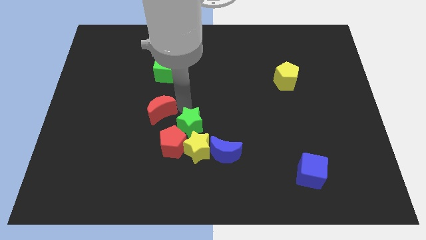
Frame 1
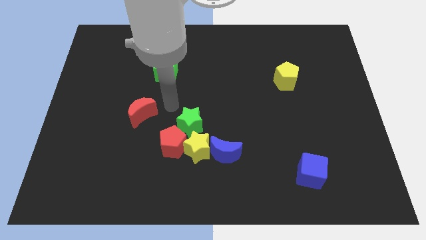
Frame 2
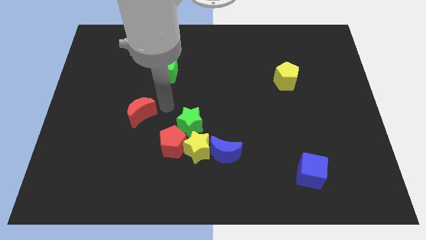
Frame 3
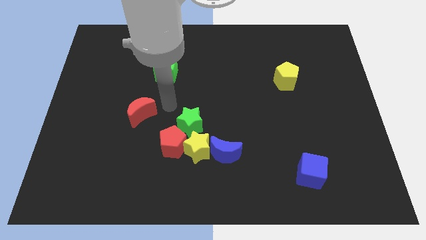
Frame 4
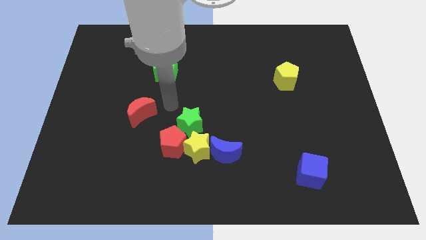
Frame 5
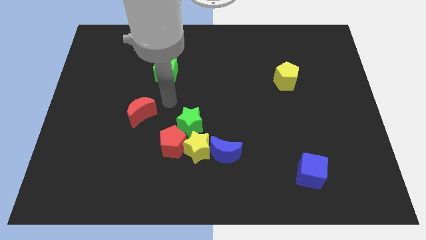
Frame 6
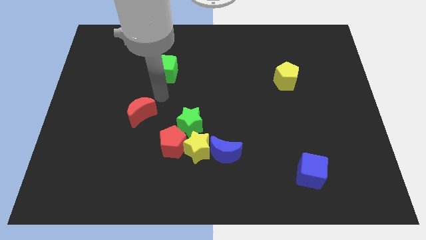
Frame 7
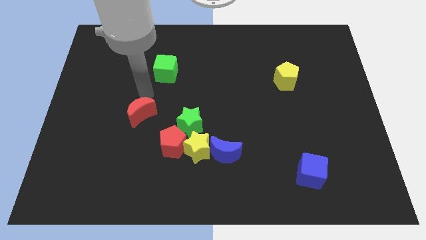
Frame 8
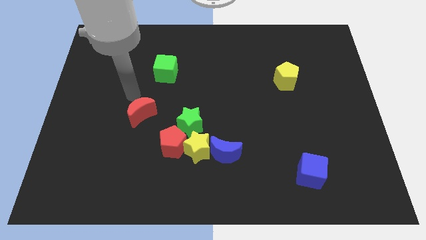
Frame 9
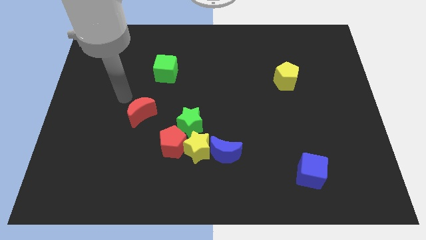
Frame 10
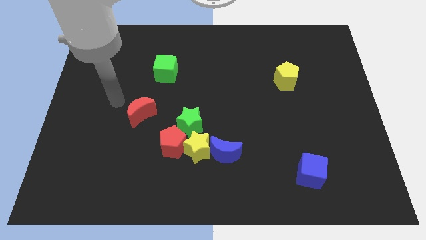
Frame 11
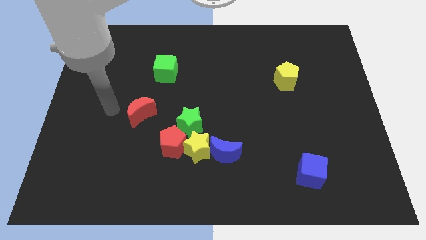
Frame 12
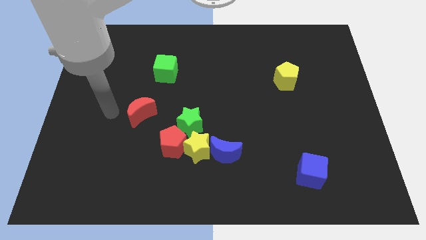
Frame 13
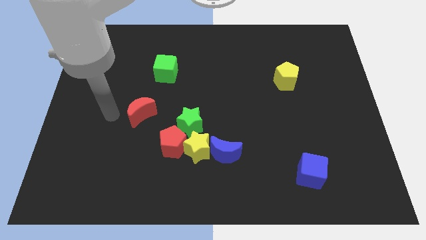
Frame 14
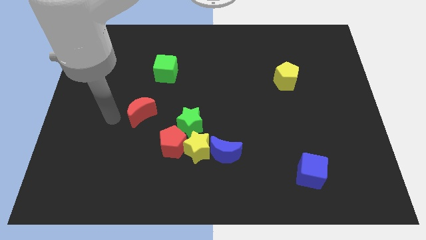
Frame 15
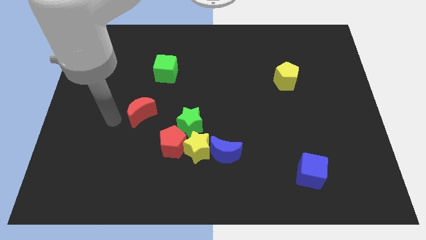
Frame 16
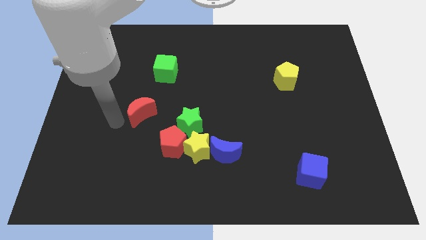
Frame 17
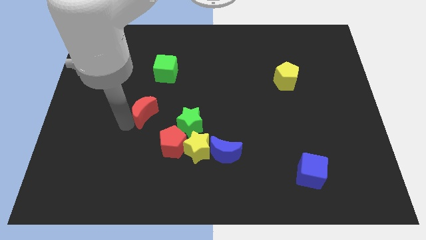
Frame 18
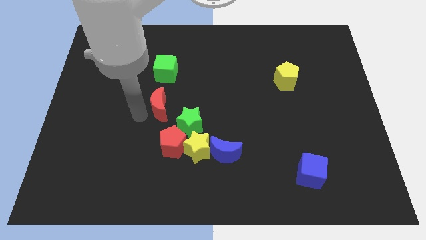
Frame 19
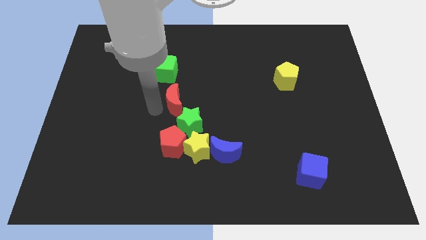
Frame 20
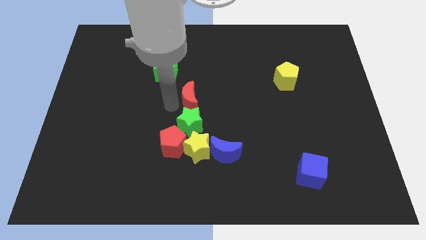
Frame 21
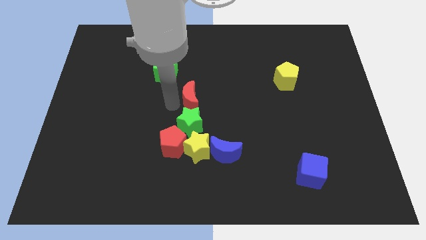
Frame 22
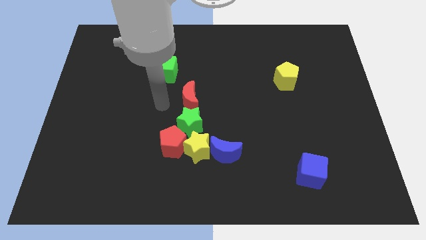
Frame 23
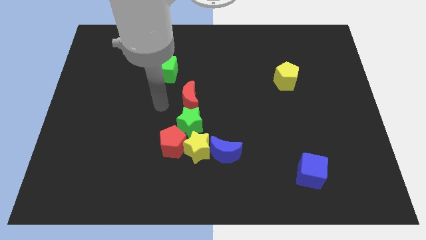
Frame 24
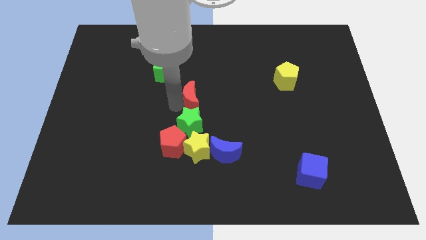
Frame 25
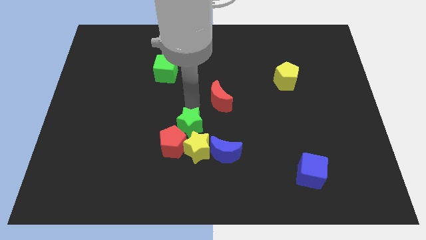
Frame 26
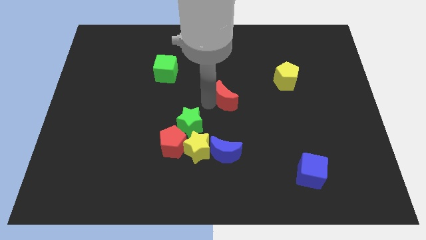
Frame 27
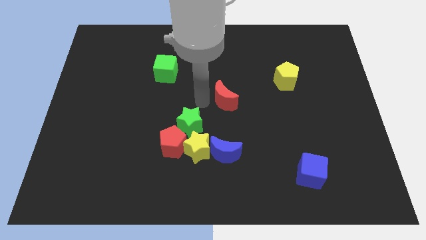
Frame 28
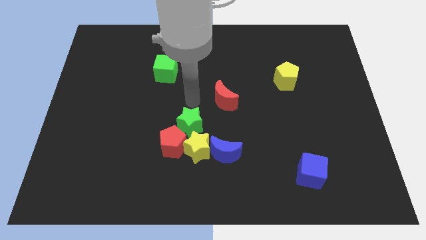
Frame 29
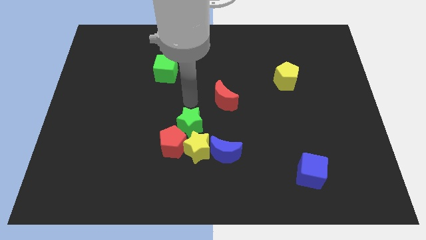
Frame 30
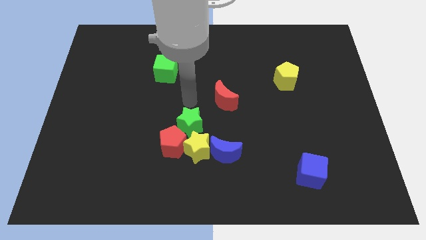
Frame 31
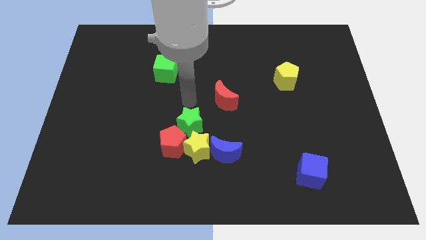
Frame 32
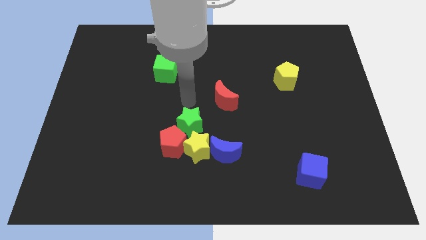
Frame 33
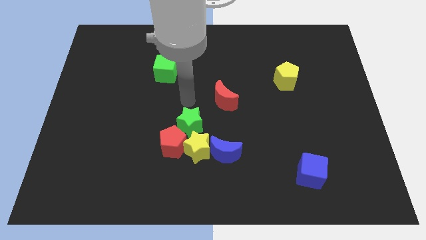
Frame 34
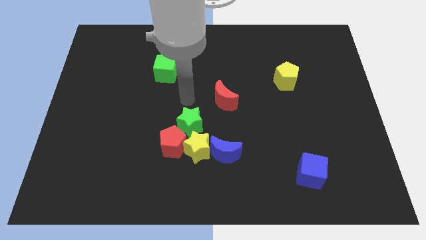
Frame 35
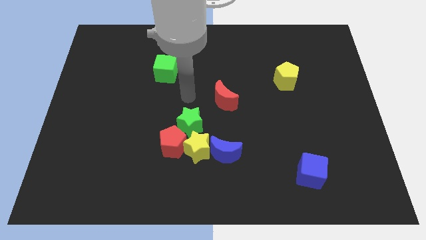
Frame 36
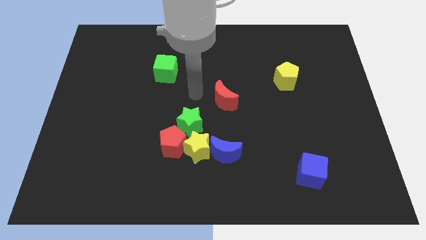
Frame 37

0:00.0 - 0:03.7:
place red crescent to the center of the board

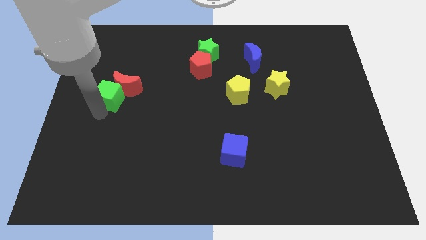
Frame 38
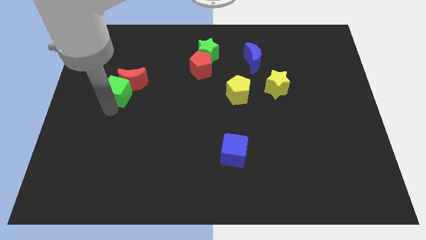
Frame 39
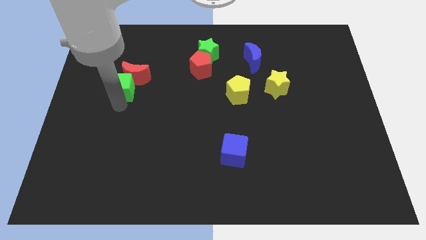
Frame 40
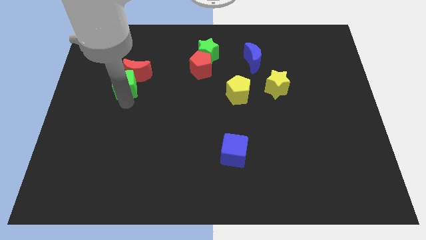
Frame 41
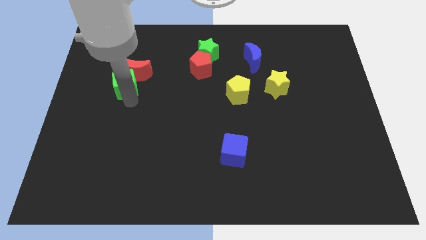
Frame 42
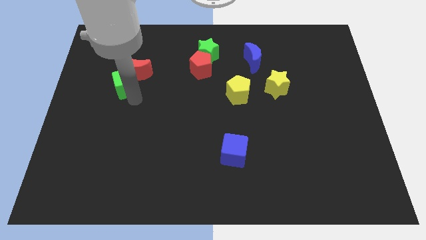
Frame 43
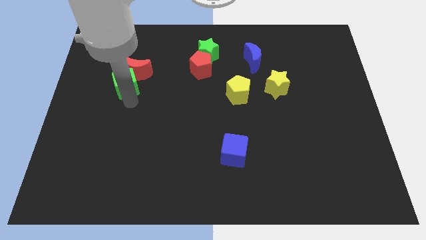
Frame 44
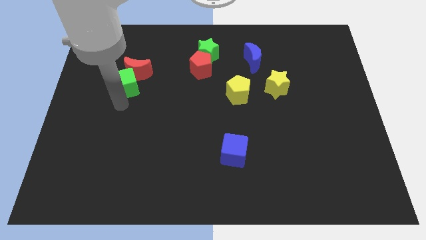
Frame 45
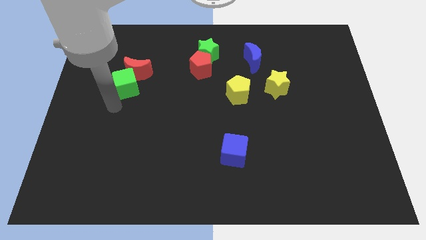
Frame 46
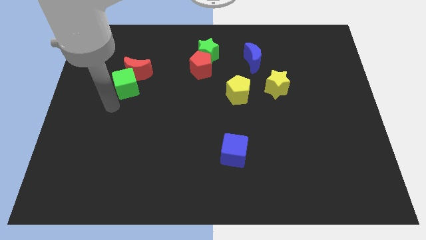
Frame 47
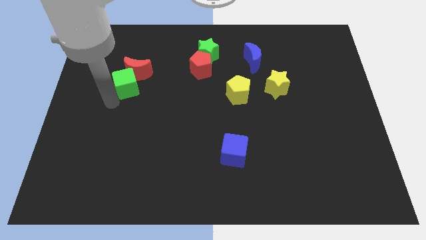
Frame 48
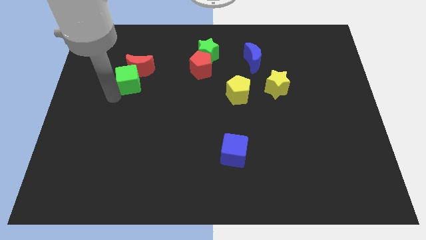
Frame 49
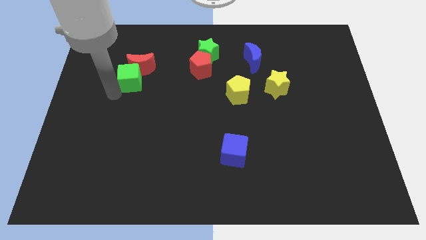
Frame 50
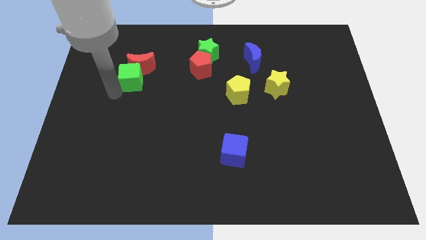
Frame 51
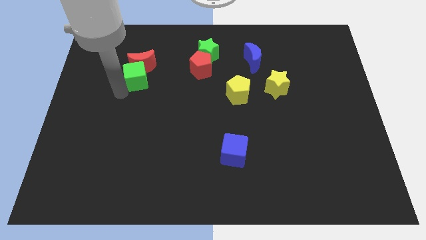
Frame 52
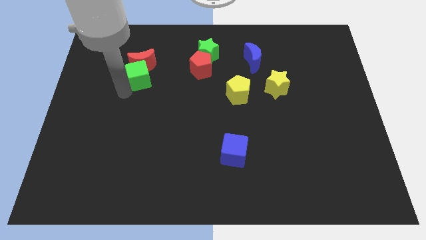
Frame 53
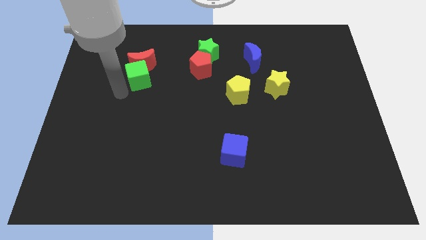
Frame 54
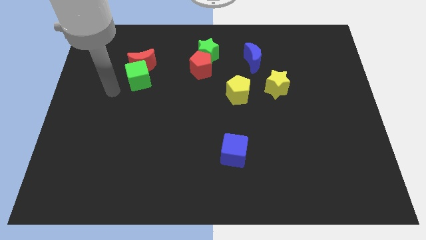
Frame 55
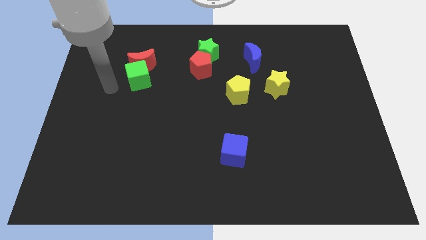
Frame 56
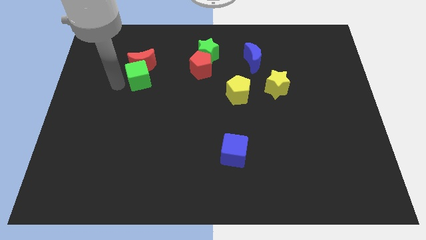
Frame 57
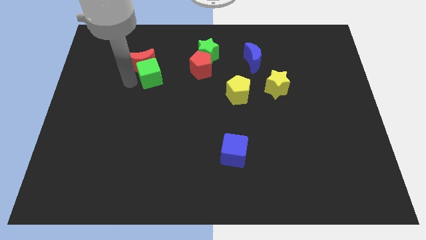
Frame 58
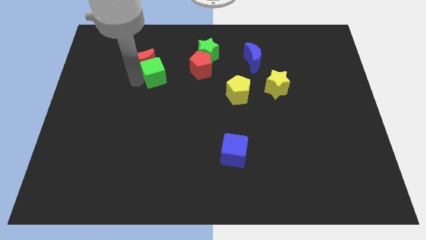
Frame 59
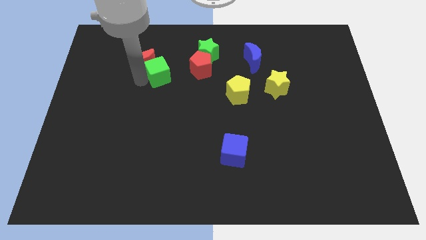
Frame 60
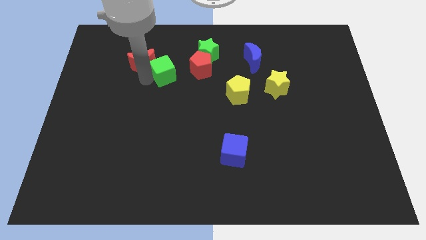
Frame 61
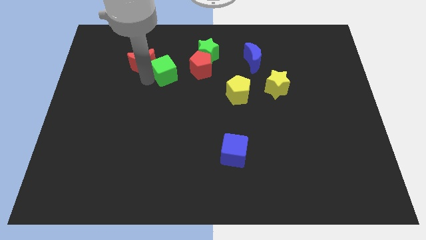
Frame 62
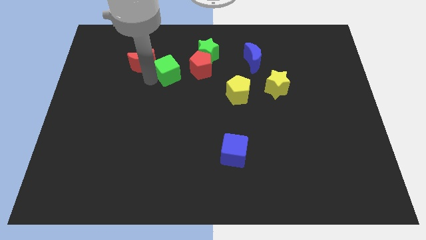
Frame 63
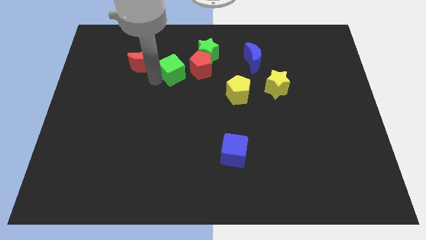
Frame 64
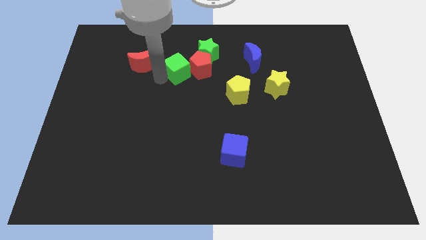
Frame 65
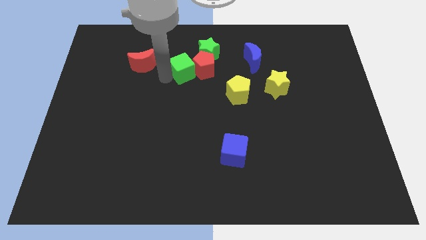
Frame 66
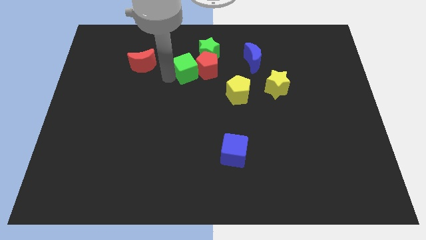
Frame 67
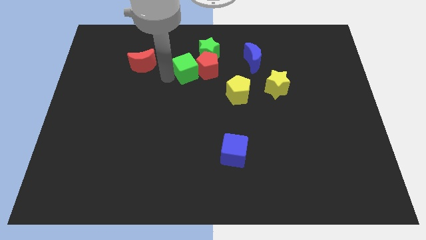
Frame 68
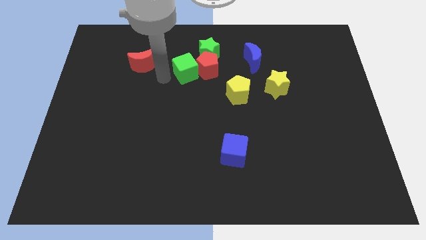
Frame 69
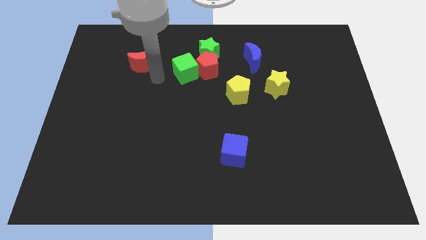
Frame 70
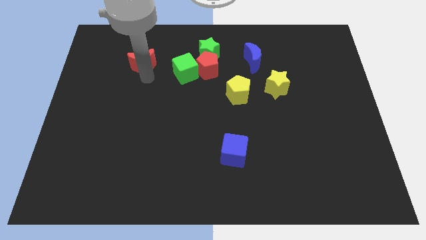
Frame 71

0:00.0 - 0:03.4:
move the green cube into the red pentagon

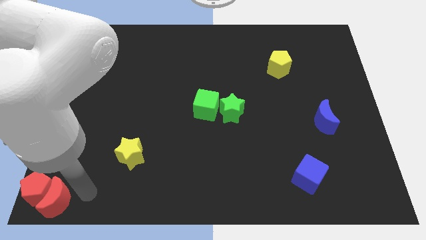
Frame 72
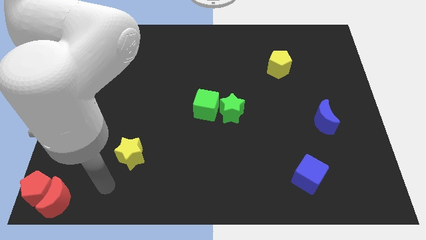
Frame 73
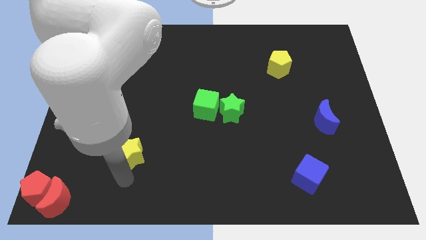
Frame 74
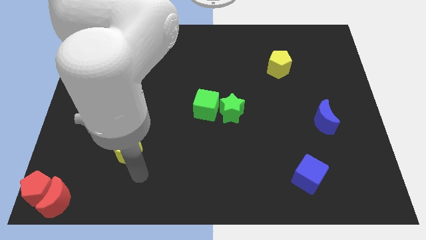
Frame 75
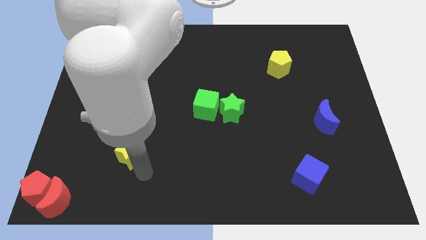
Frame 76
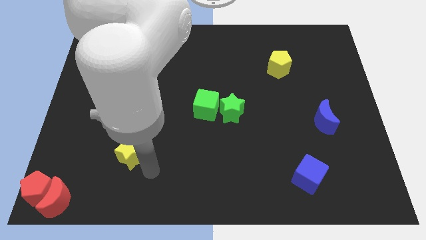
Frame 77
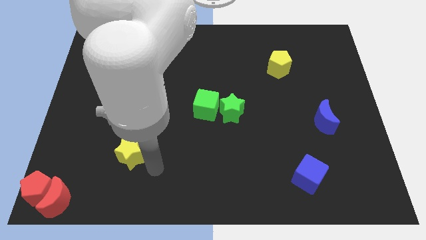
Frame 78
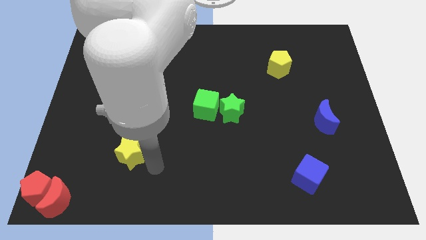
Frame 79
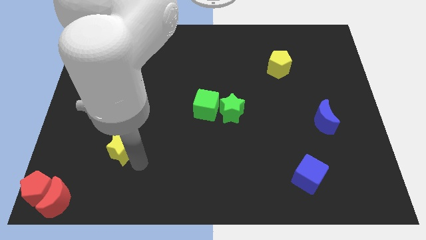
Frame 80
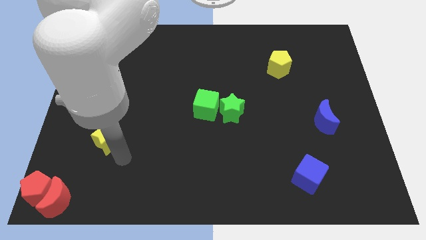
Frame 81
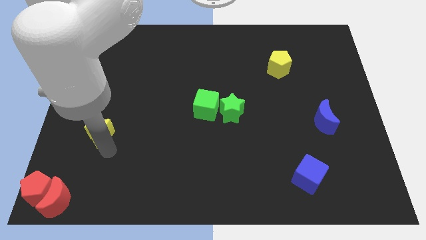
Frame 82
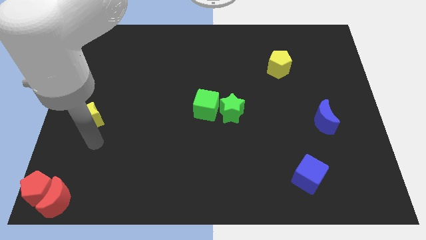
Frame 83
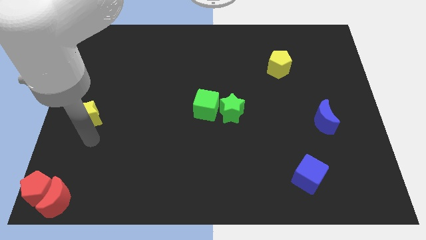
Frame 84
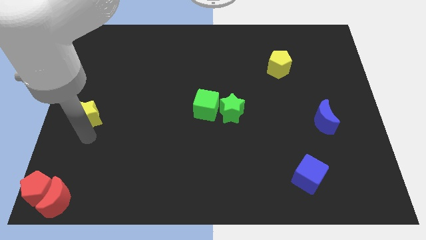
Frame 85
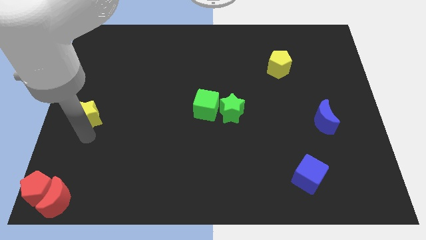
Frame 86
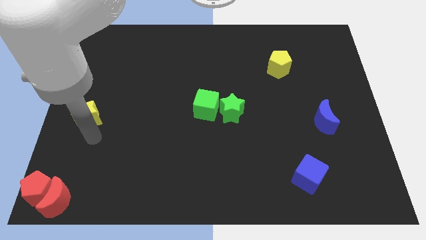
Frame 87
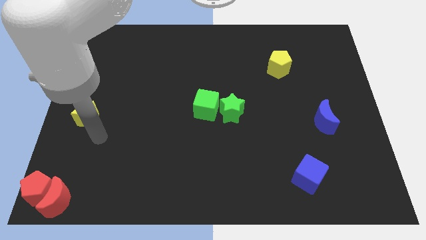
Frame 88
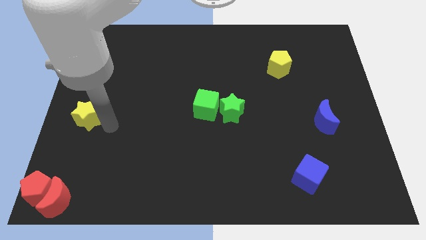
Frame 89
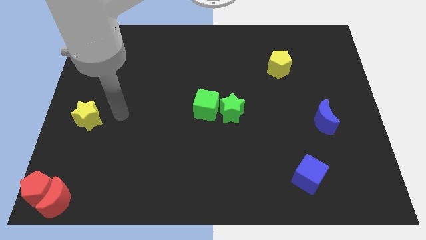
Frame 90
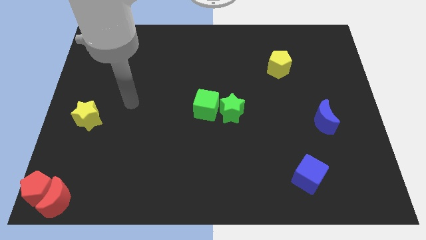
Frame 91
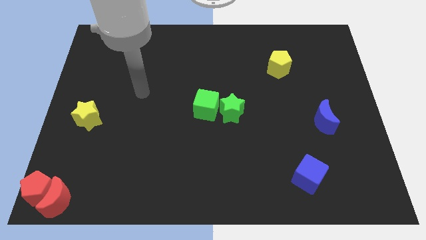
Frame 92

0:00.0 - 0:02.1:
slide yellow star towards center left
